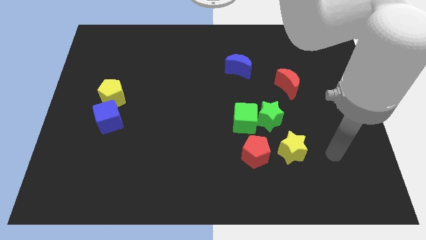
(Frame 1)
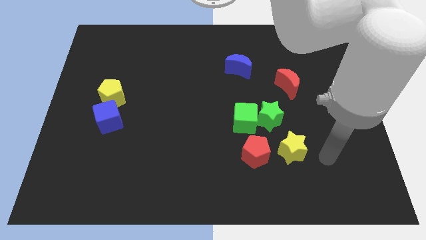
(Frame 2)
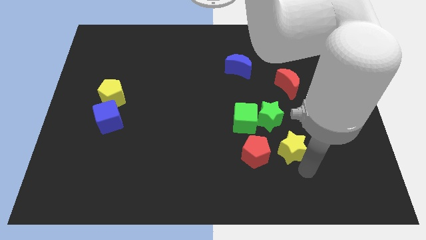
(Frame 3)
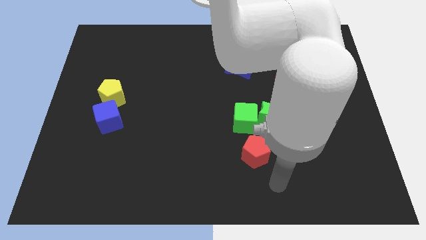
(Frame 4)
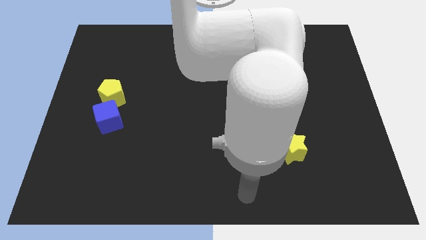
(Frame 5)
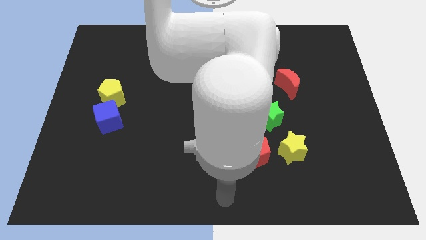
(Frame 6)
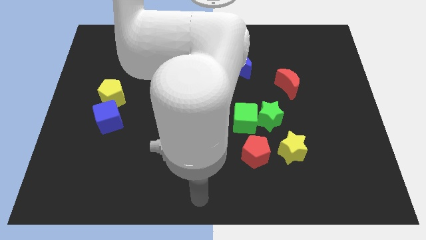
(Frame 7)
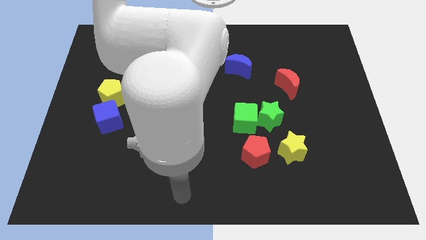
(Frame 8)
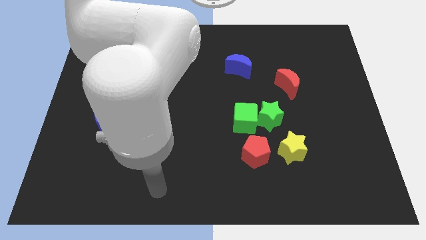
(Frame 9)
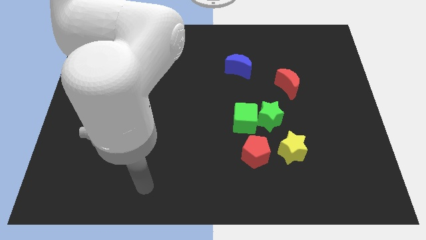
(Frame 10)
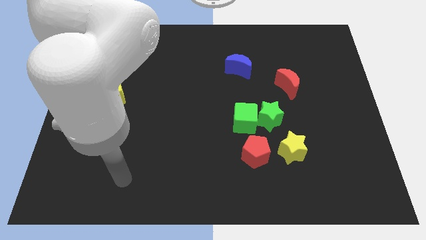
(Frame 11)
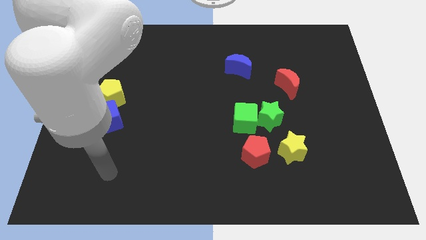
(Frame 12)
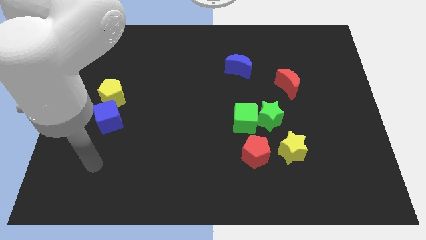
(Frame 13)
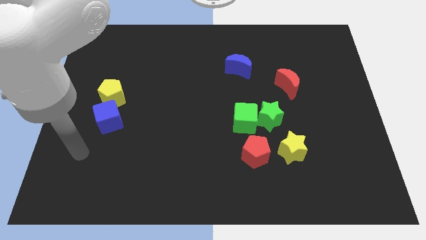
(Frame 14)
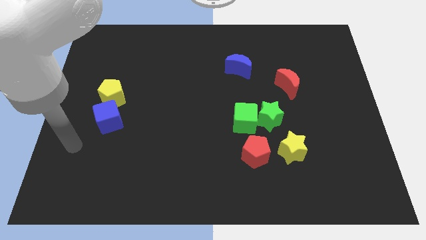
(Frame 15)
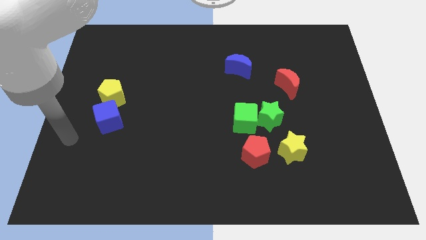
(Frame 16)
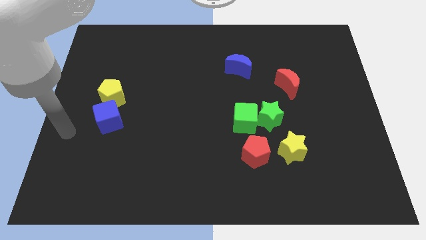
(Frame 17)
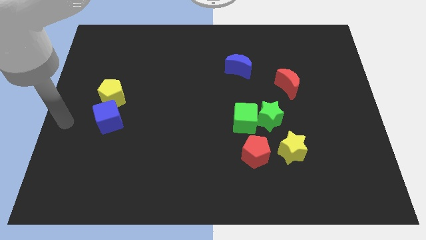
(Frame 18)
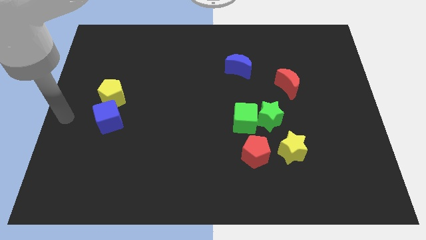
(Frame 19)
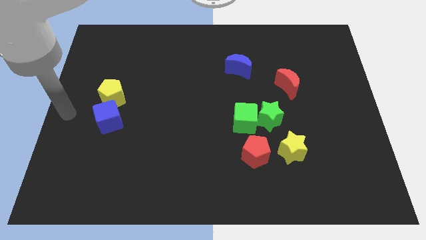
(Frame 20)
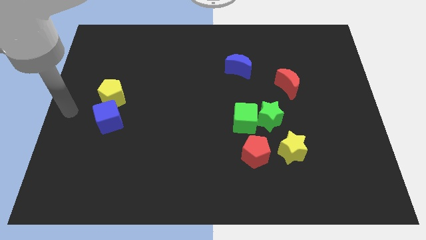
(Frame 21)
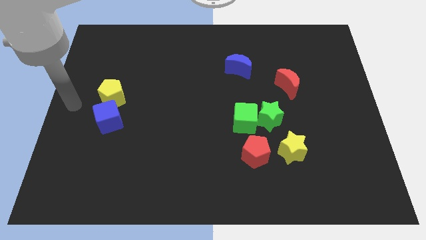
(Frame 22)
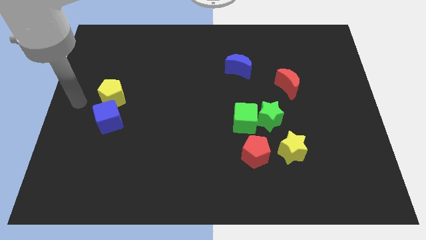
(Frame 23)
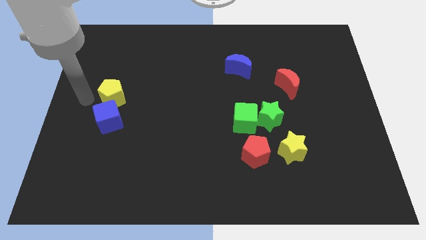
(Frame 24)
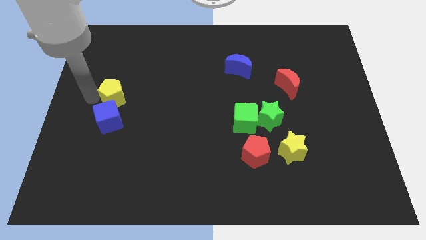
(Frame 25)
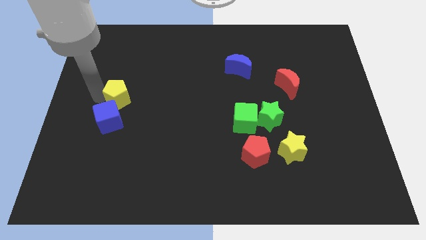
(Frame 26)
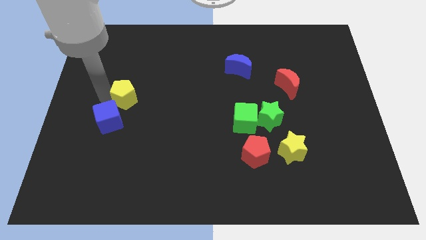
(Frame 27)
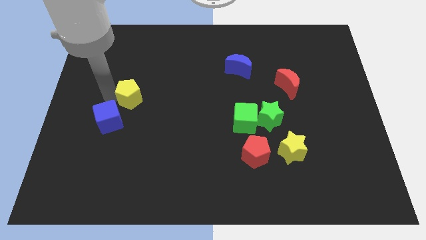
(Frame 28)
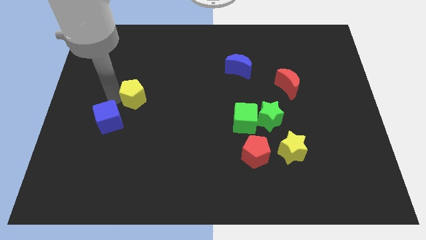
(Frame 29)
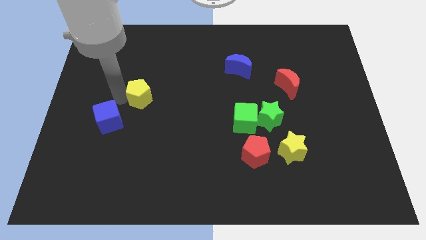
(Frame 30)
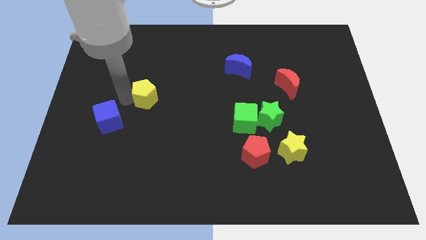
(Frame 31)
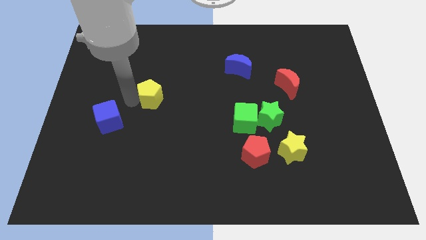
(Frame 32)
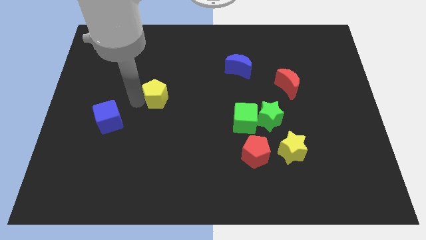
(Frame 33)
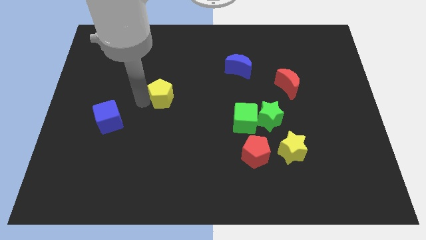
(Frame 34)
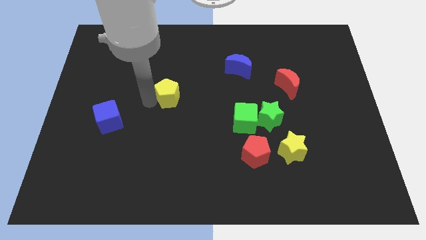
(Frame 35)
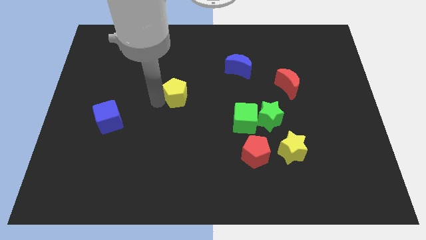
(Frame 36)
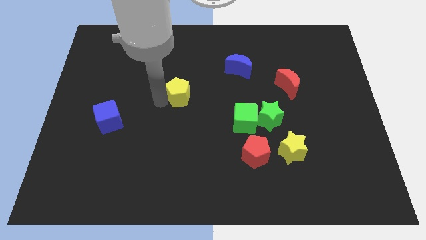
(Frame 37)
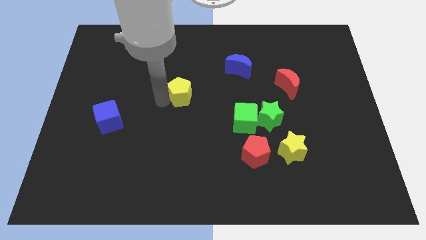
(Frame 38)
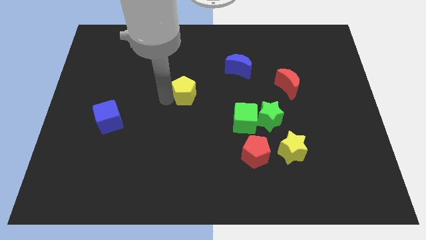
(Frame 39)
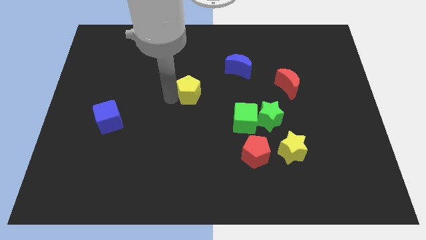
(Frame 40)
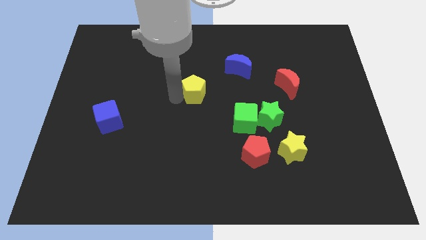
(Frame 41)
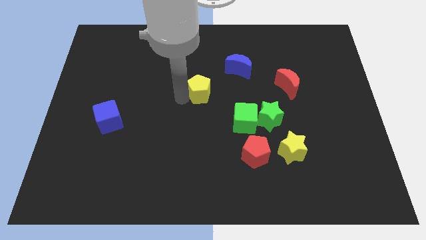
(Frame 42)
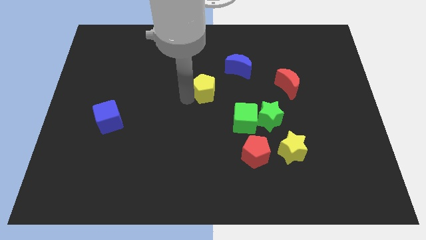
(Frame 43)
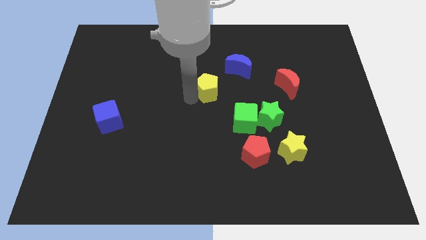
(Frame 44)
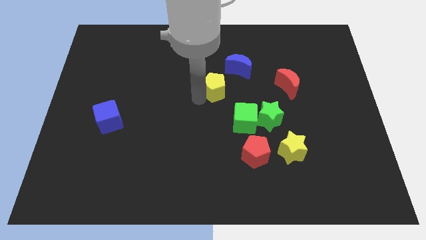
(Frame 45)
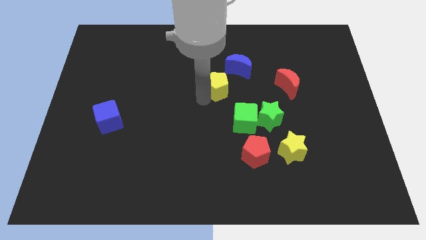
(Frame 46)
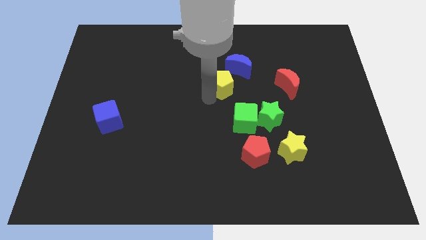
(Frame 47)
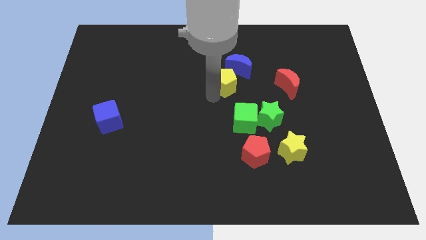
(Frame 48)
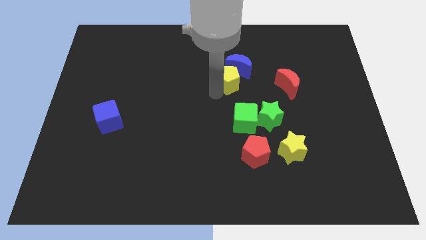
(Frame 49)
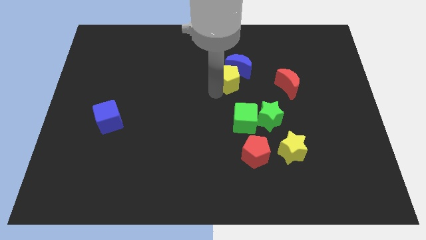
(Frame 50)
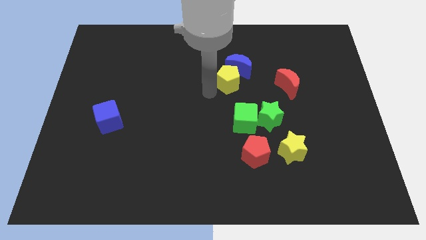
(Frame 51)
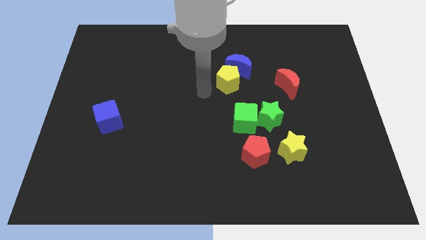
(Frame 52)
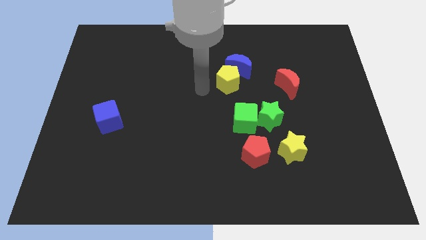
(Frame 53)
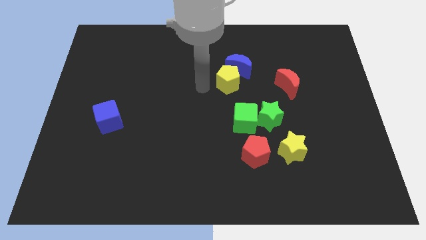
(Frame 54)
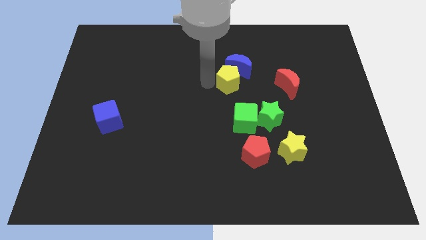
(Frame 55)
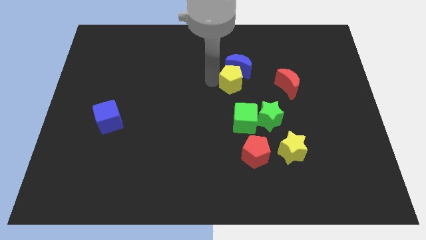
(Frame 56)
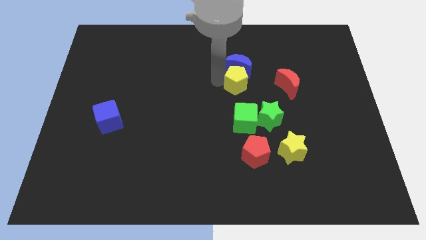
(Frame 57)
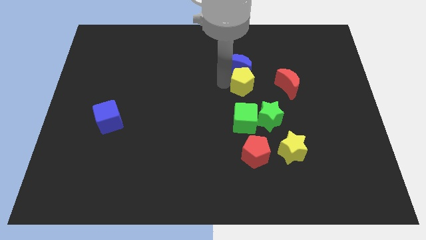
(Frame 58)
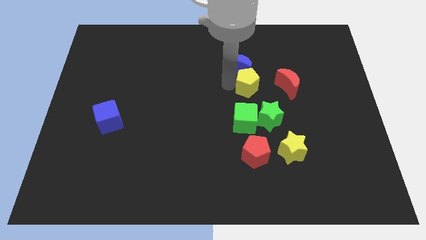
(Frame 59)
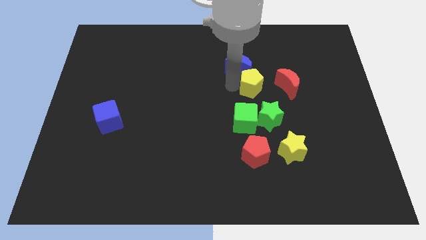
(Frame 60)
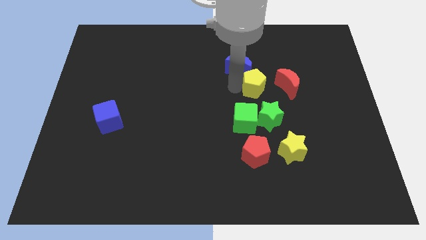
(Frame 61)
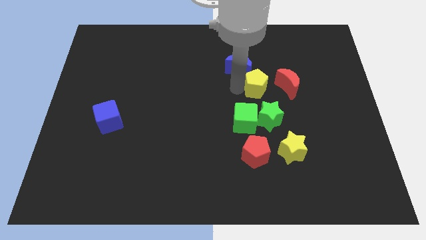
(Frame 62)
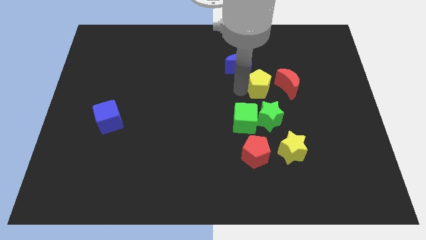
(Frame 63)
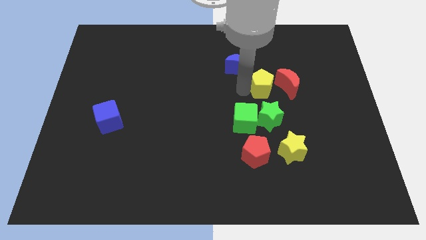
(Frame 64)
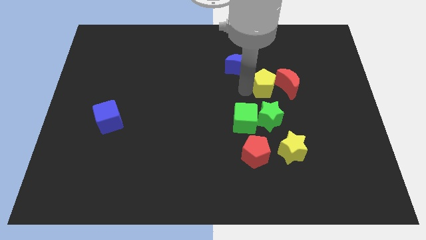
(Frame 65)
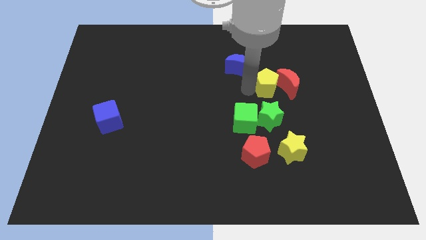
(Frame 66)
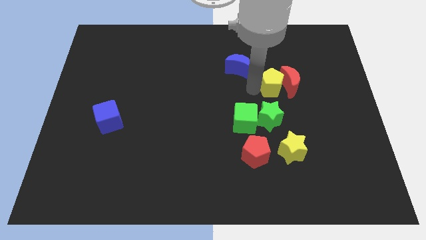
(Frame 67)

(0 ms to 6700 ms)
slide the yellow pentagon towards the red moon

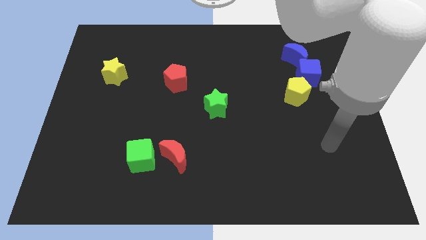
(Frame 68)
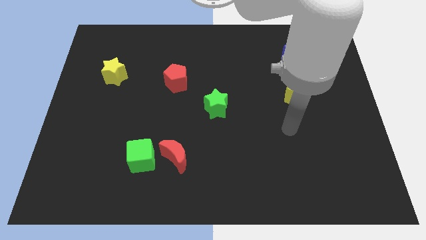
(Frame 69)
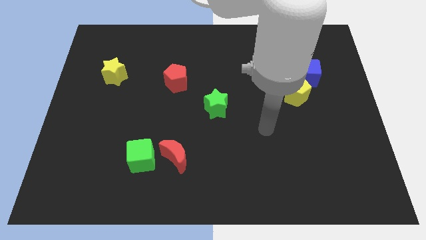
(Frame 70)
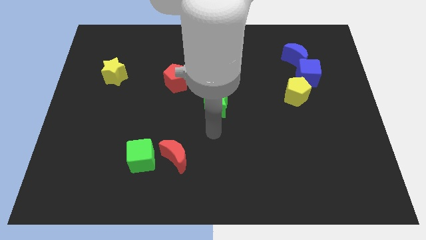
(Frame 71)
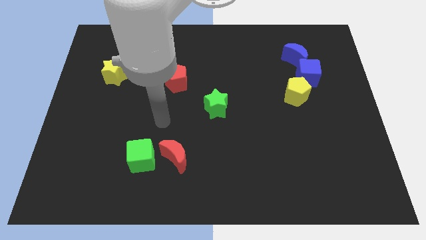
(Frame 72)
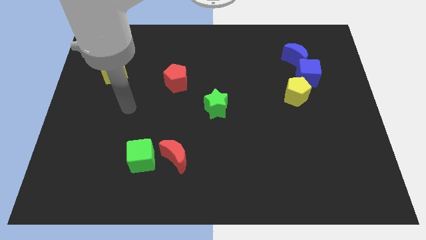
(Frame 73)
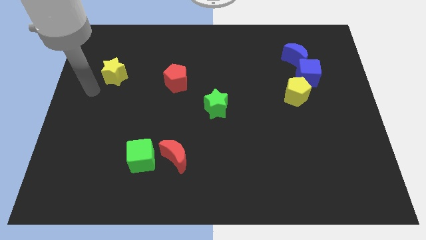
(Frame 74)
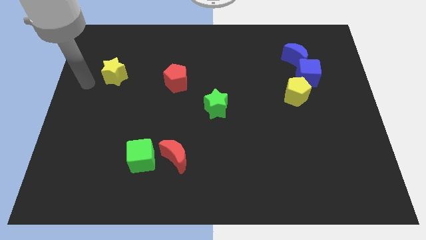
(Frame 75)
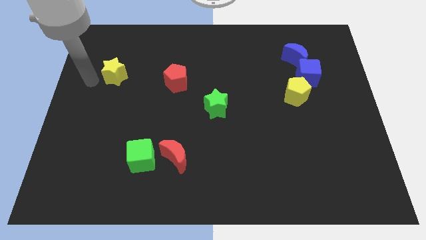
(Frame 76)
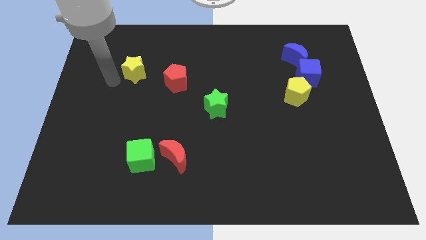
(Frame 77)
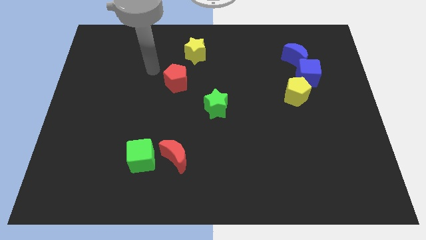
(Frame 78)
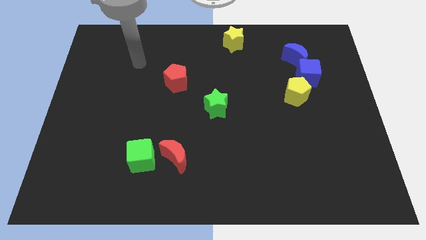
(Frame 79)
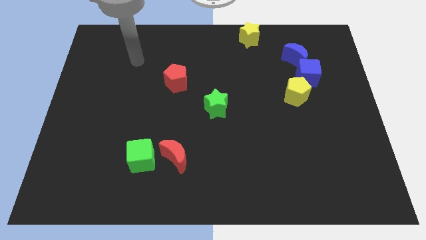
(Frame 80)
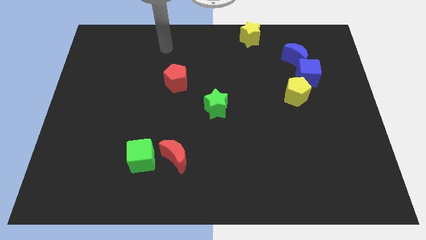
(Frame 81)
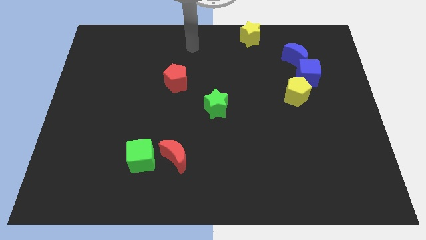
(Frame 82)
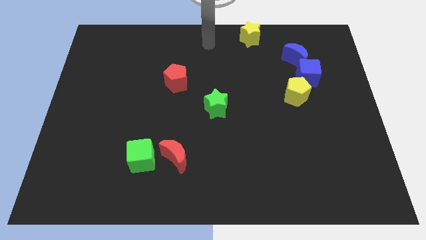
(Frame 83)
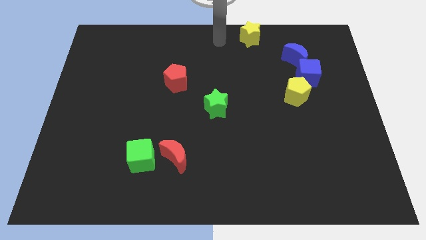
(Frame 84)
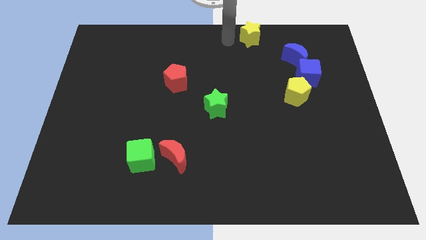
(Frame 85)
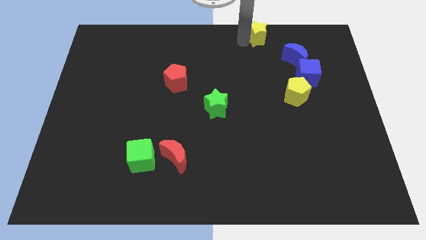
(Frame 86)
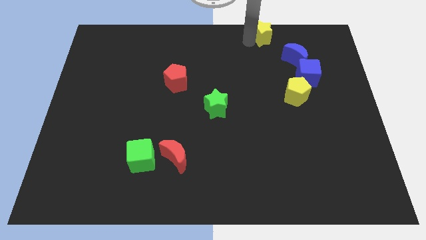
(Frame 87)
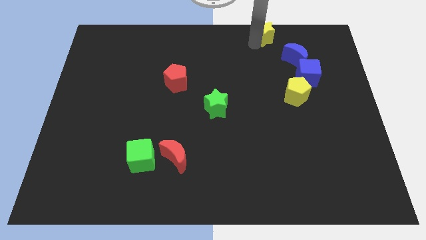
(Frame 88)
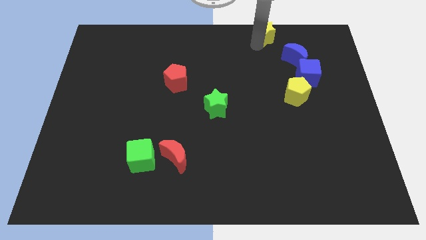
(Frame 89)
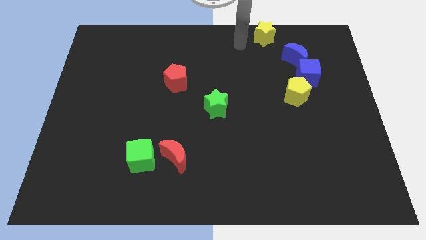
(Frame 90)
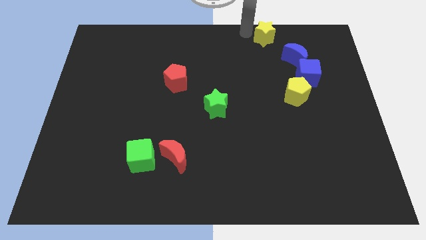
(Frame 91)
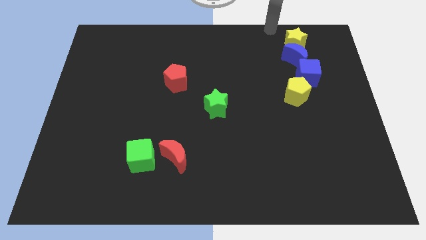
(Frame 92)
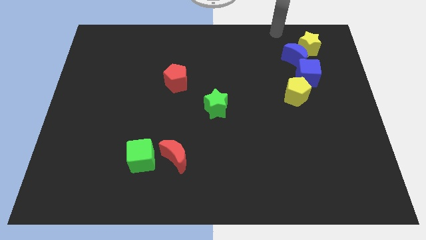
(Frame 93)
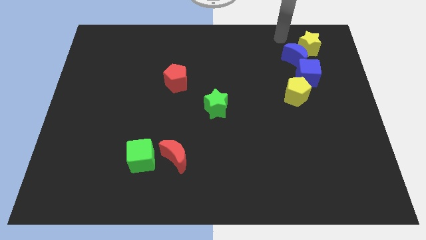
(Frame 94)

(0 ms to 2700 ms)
move the yellow star towards the blue moon
